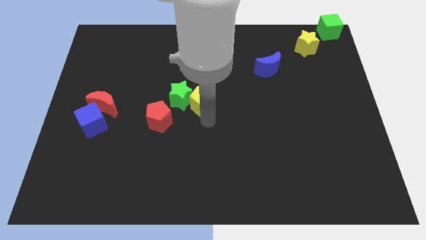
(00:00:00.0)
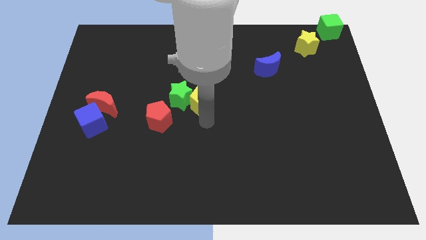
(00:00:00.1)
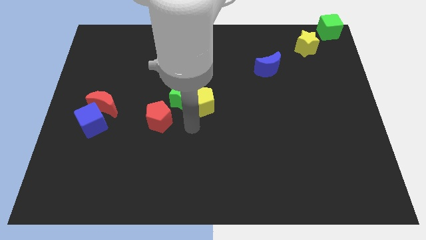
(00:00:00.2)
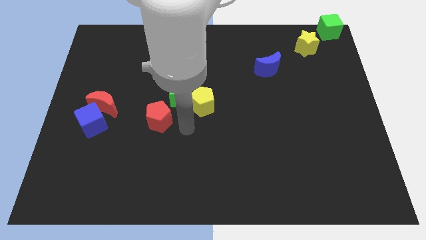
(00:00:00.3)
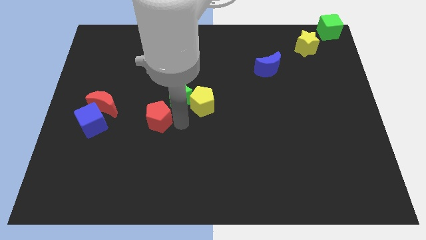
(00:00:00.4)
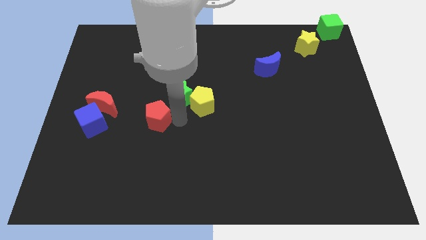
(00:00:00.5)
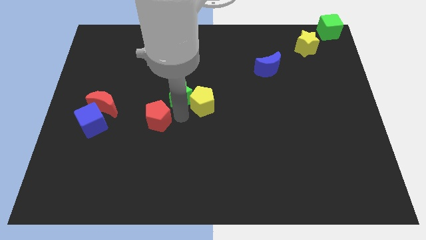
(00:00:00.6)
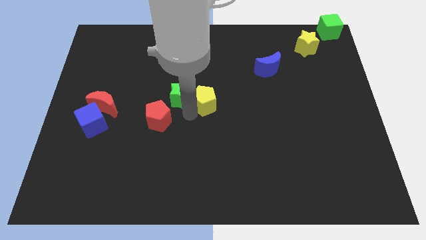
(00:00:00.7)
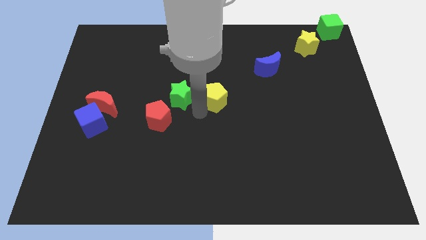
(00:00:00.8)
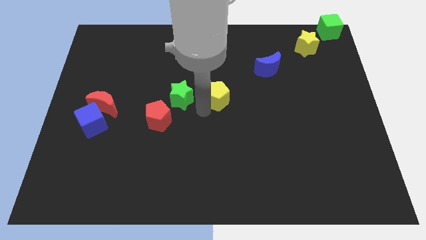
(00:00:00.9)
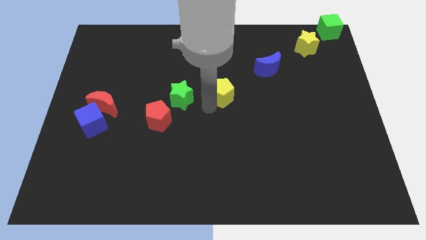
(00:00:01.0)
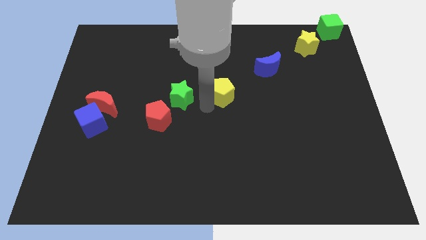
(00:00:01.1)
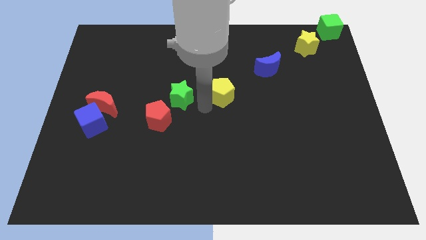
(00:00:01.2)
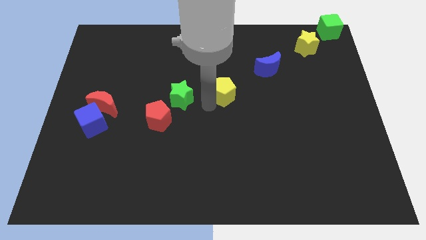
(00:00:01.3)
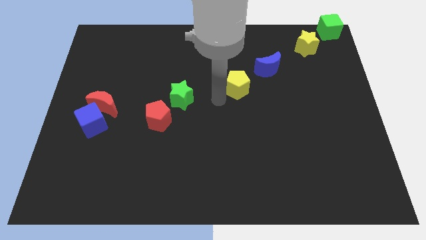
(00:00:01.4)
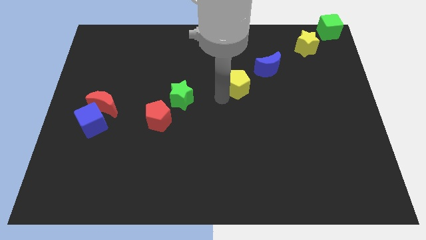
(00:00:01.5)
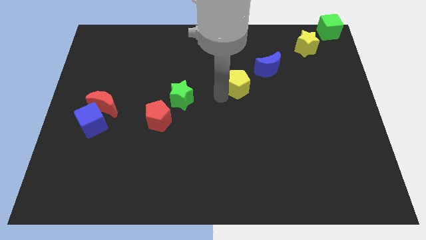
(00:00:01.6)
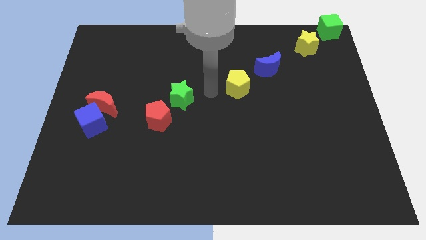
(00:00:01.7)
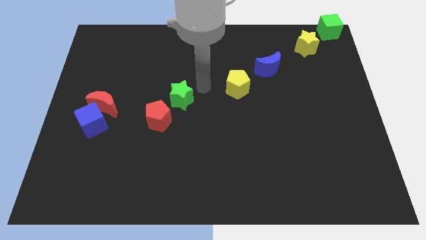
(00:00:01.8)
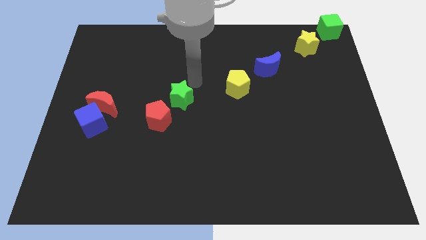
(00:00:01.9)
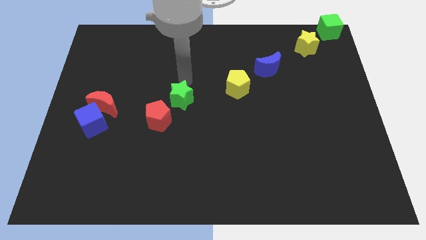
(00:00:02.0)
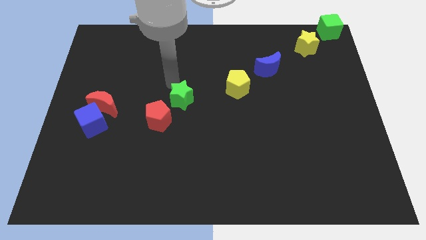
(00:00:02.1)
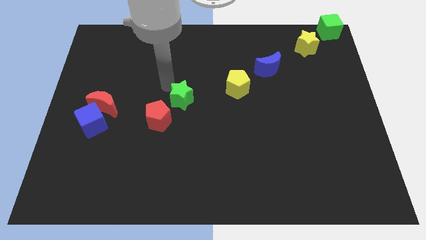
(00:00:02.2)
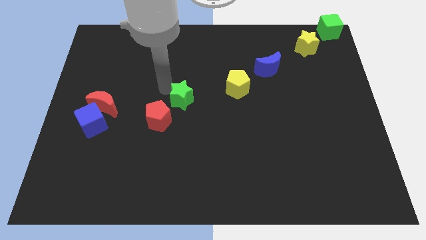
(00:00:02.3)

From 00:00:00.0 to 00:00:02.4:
separate the yellow pentagon from the green star

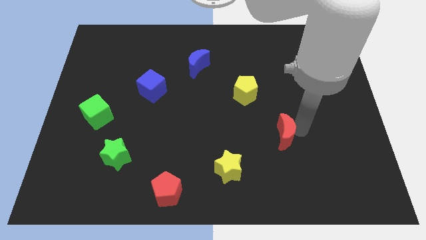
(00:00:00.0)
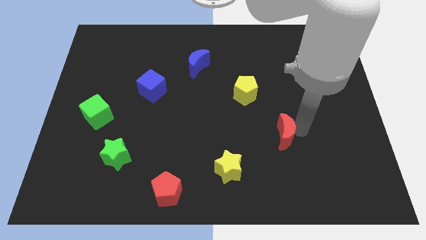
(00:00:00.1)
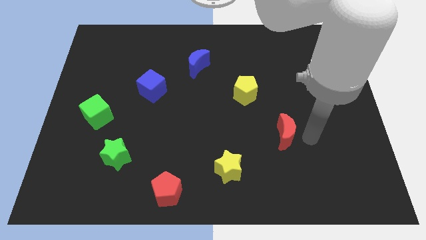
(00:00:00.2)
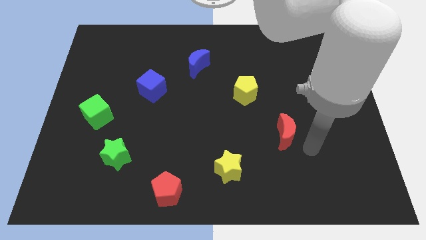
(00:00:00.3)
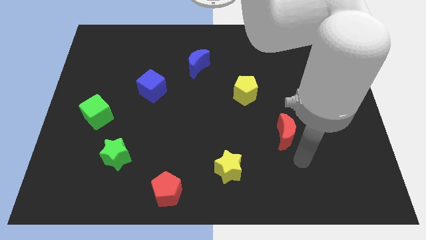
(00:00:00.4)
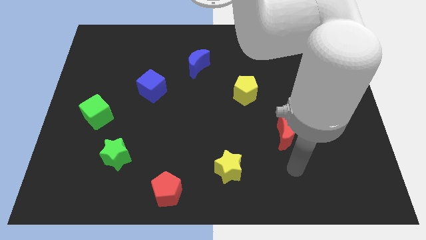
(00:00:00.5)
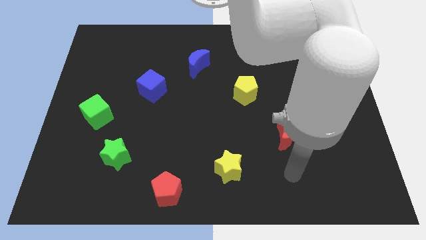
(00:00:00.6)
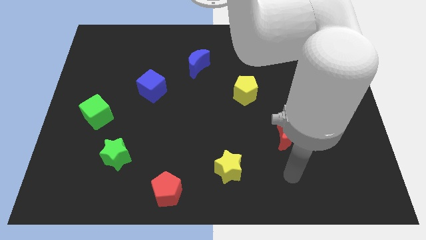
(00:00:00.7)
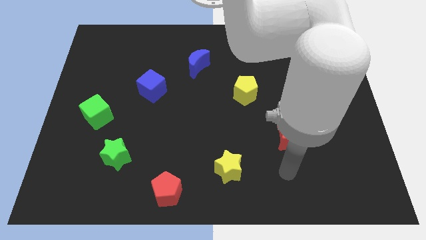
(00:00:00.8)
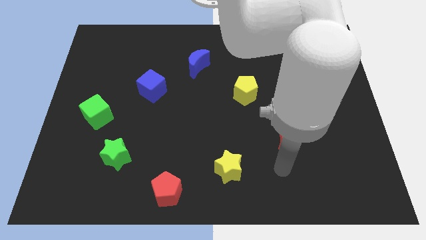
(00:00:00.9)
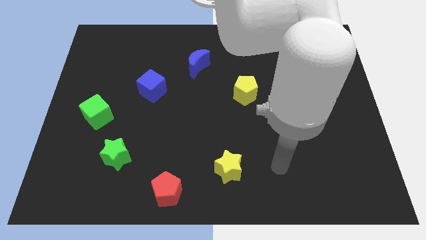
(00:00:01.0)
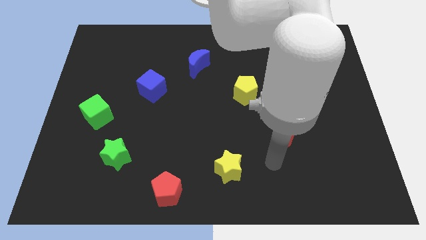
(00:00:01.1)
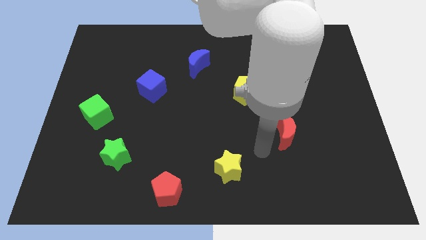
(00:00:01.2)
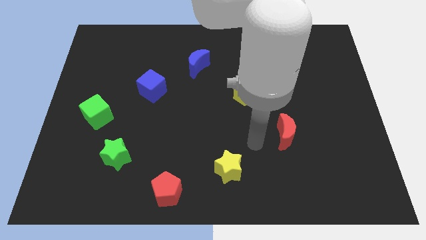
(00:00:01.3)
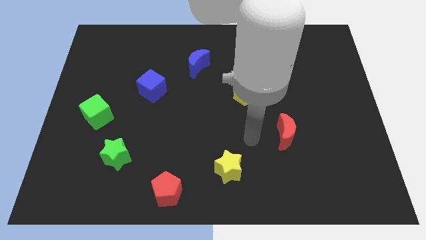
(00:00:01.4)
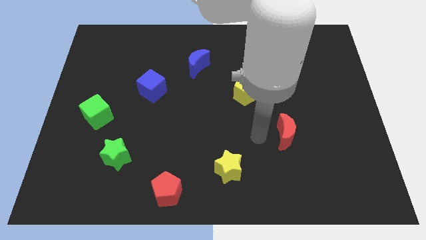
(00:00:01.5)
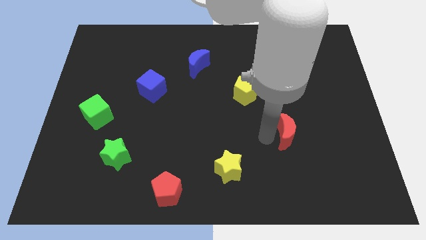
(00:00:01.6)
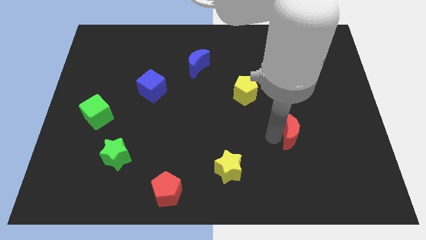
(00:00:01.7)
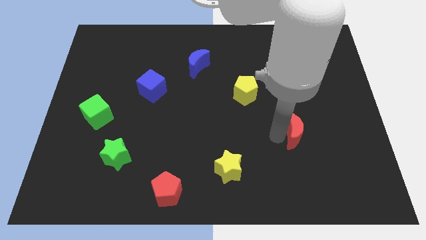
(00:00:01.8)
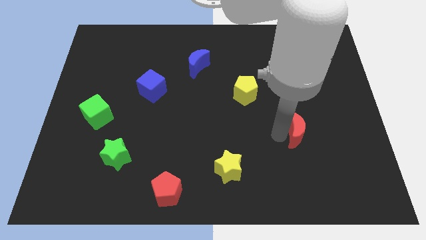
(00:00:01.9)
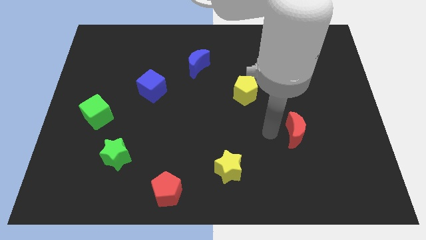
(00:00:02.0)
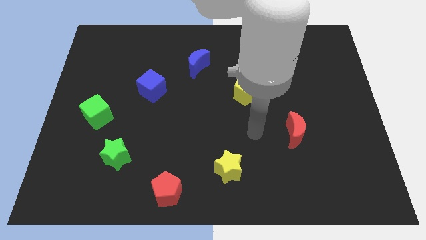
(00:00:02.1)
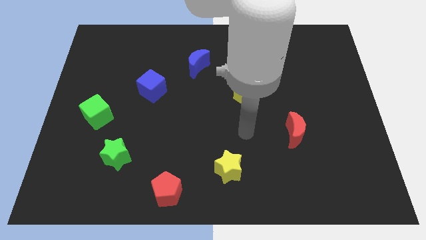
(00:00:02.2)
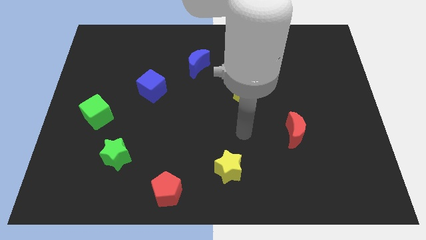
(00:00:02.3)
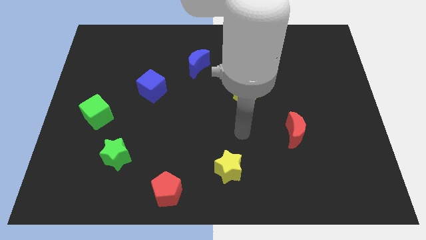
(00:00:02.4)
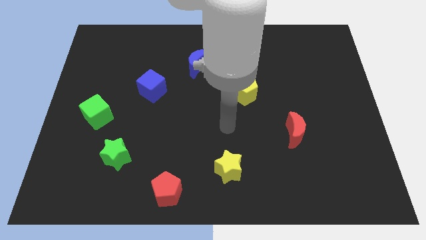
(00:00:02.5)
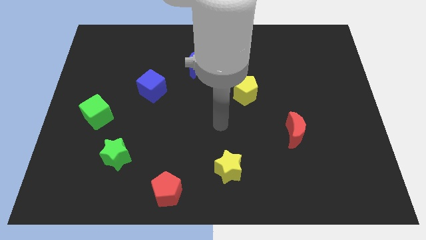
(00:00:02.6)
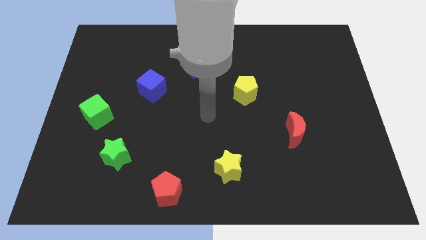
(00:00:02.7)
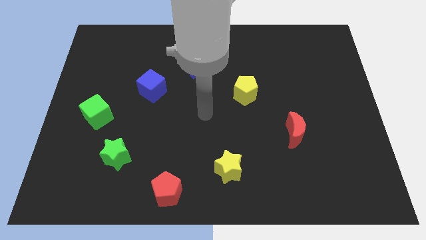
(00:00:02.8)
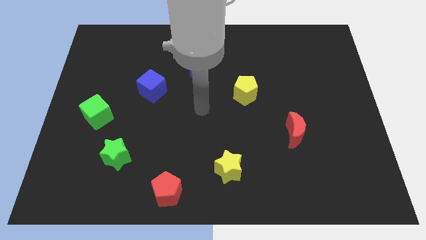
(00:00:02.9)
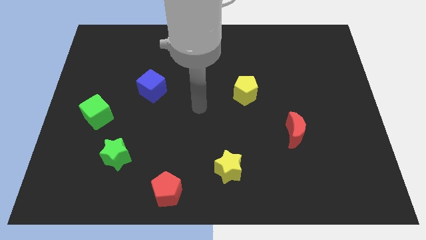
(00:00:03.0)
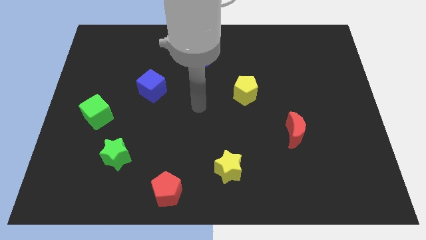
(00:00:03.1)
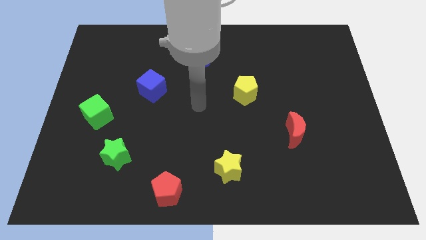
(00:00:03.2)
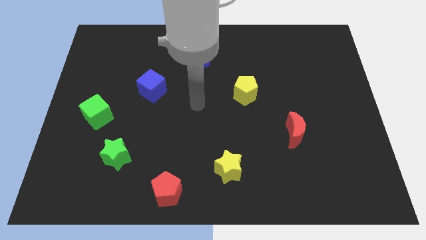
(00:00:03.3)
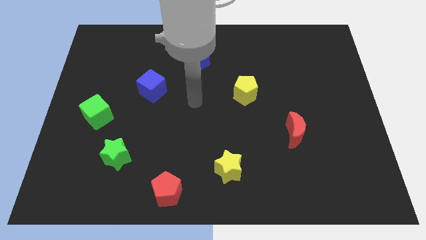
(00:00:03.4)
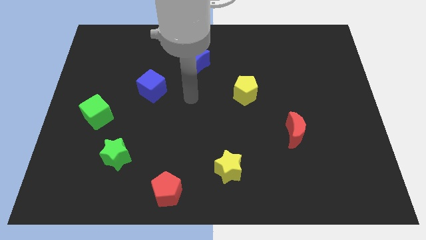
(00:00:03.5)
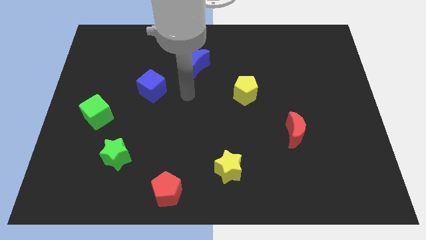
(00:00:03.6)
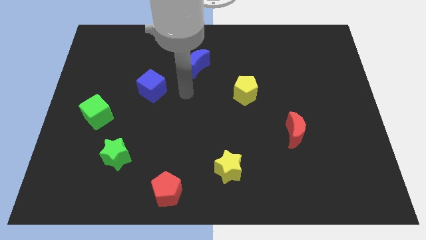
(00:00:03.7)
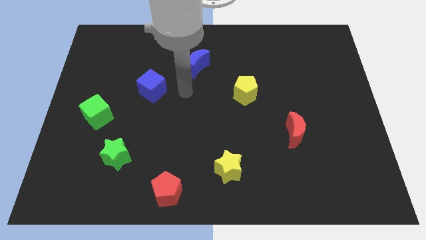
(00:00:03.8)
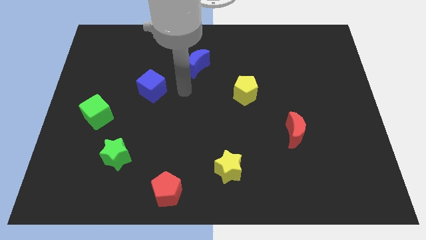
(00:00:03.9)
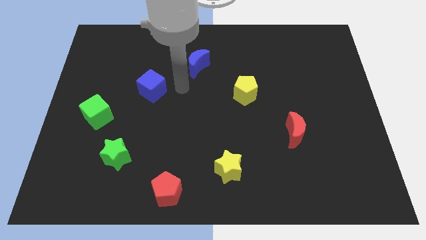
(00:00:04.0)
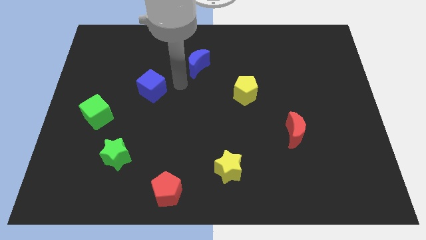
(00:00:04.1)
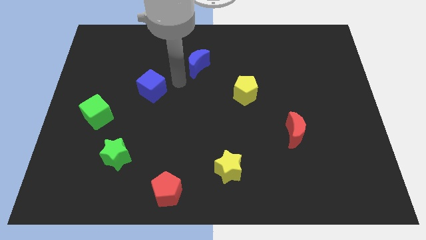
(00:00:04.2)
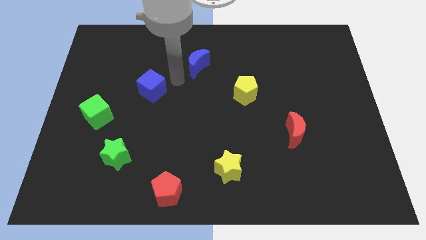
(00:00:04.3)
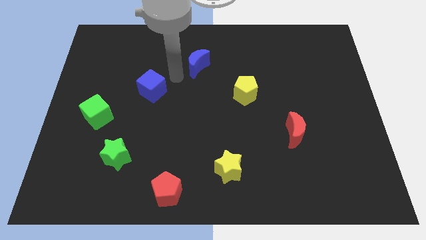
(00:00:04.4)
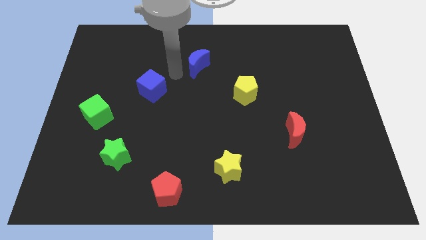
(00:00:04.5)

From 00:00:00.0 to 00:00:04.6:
slightly move red crescent towards the right of the board

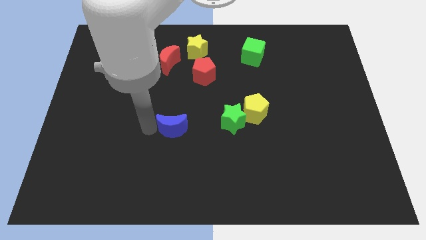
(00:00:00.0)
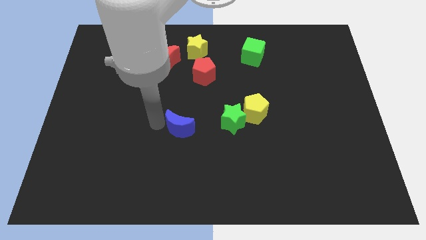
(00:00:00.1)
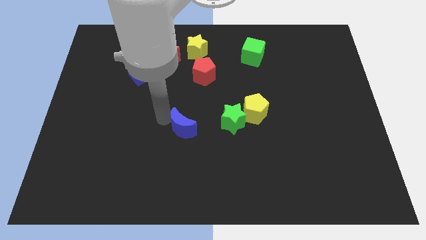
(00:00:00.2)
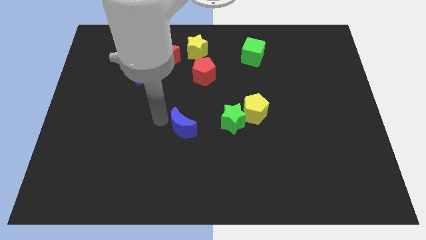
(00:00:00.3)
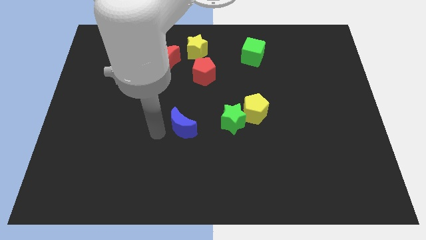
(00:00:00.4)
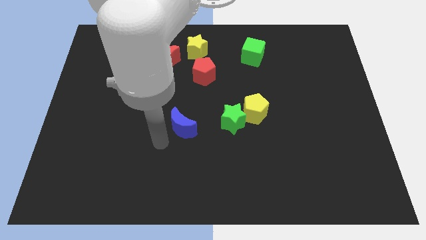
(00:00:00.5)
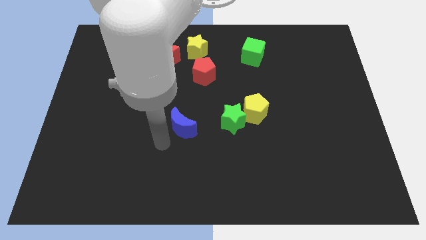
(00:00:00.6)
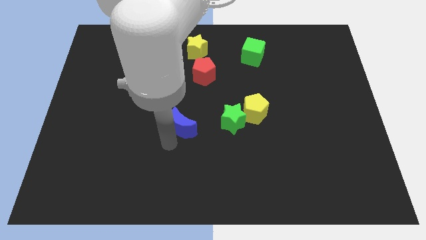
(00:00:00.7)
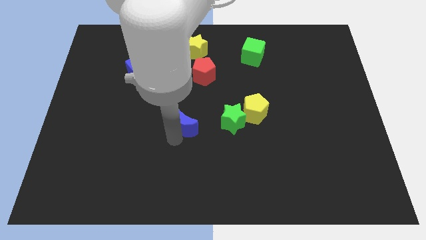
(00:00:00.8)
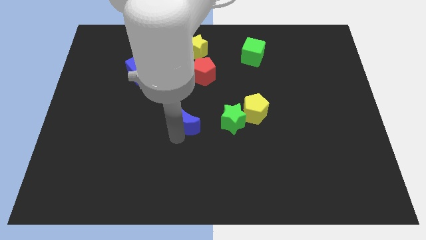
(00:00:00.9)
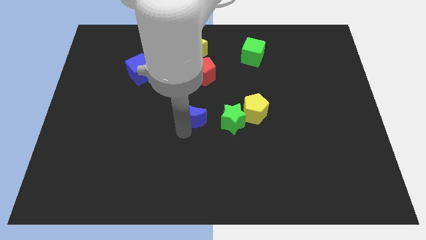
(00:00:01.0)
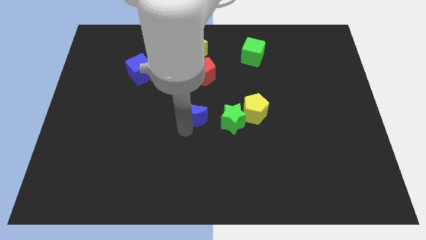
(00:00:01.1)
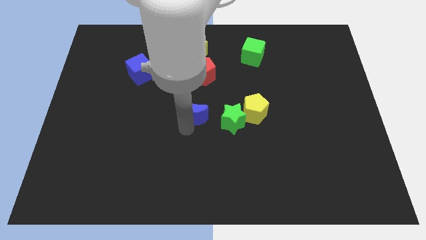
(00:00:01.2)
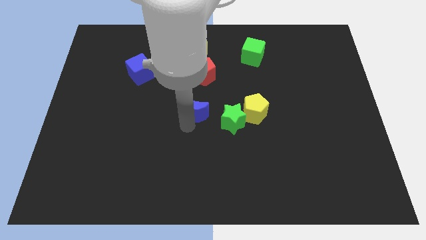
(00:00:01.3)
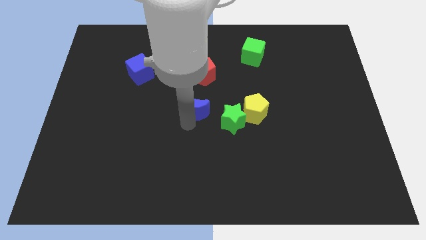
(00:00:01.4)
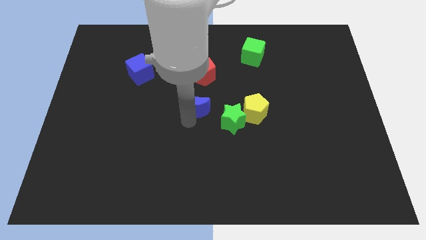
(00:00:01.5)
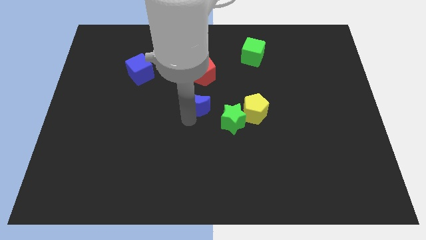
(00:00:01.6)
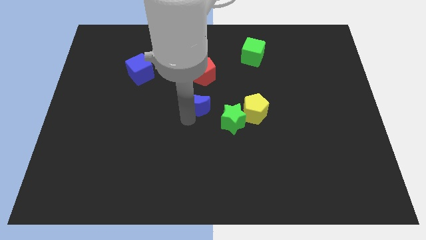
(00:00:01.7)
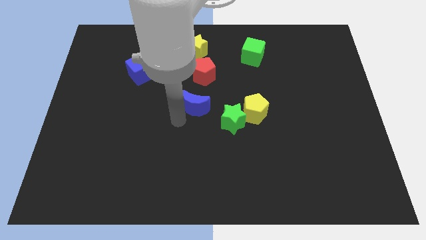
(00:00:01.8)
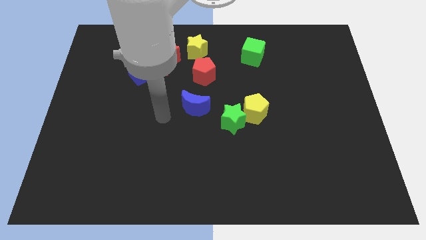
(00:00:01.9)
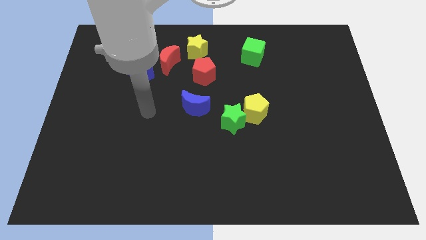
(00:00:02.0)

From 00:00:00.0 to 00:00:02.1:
place the blue moon between green star and blue cube
